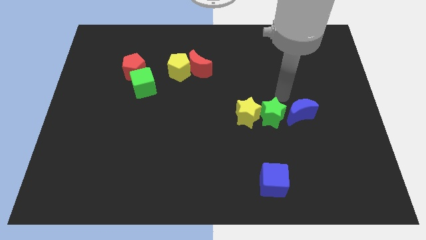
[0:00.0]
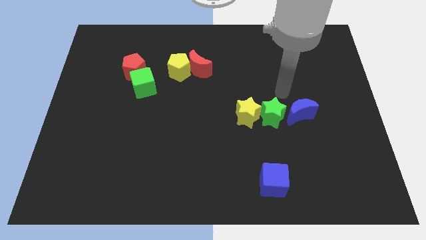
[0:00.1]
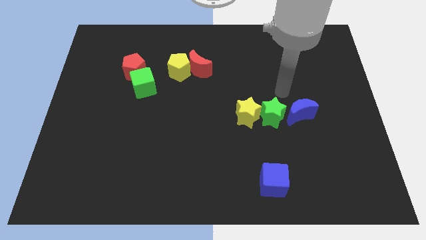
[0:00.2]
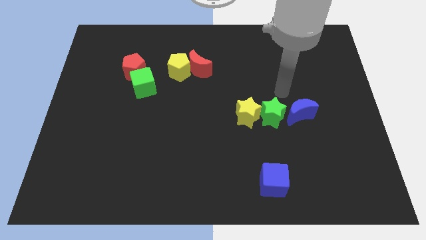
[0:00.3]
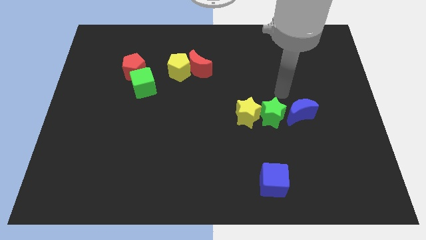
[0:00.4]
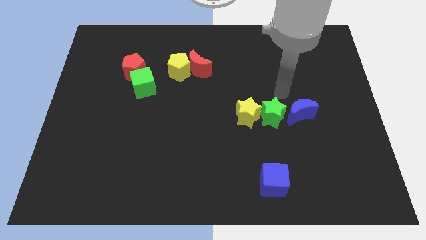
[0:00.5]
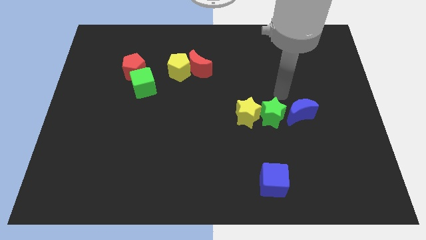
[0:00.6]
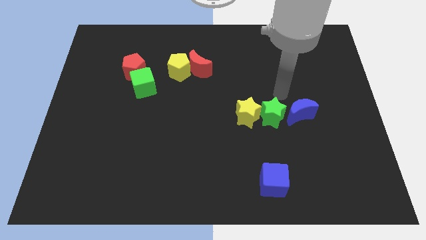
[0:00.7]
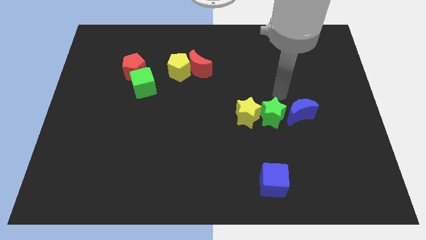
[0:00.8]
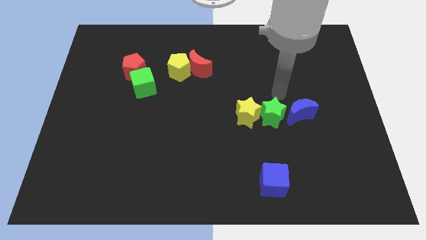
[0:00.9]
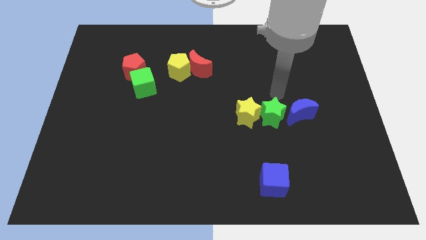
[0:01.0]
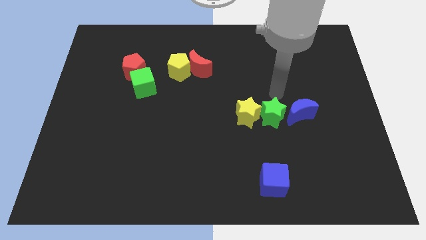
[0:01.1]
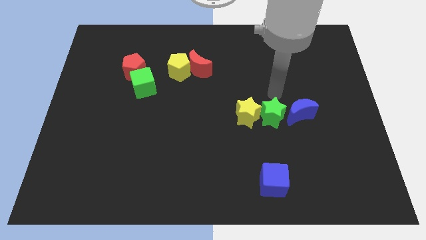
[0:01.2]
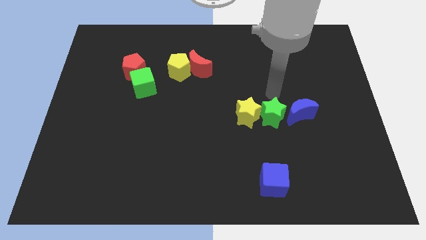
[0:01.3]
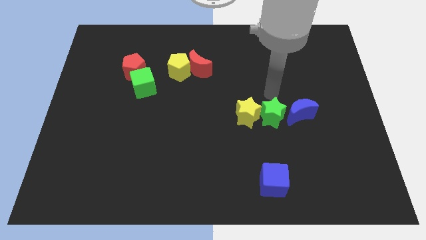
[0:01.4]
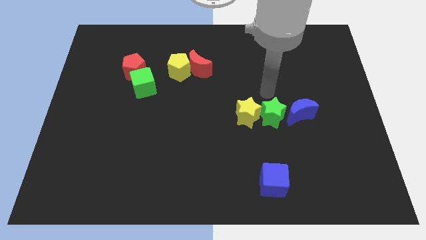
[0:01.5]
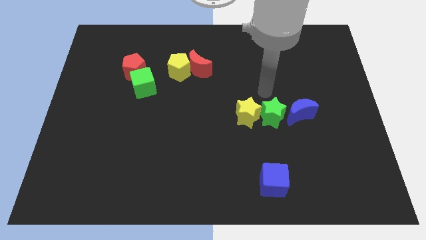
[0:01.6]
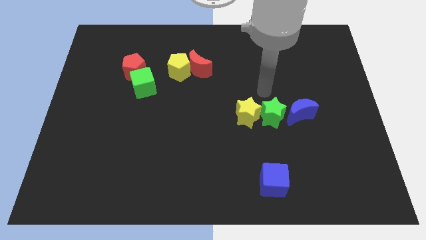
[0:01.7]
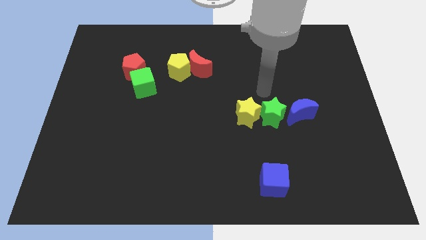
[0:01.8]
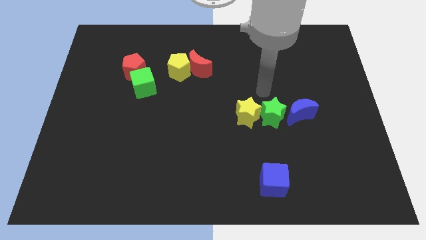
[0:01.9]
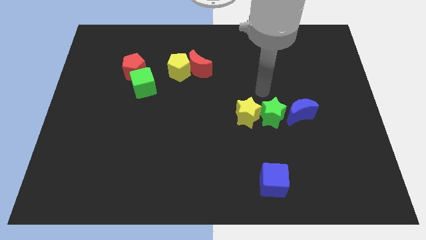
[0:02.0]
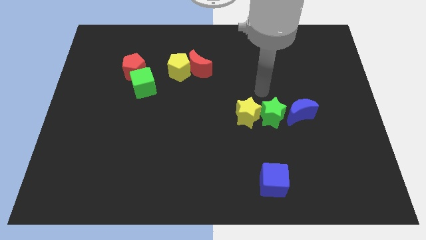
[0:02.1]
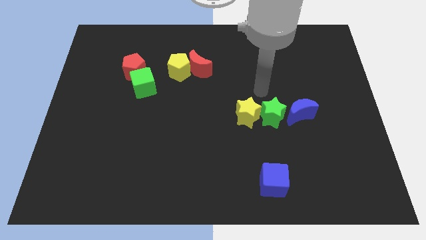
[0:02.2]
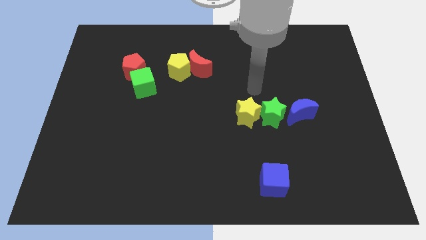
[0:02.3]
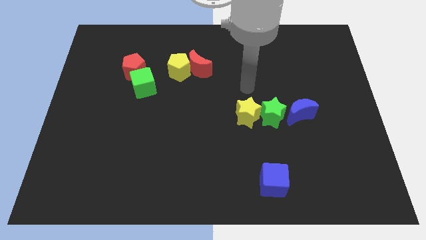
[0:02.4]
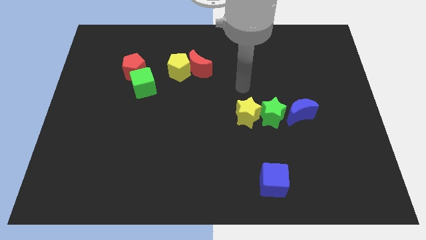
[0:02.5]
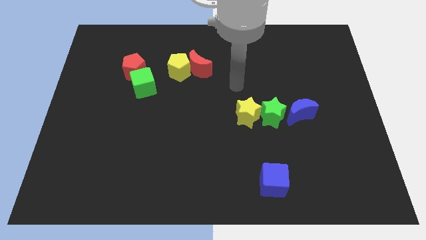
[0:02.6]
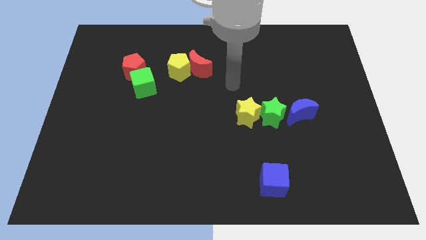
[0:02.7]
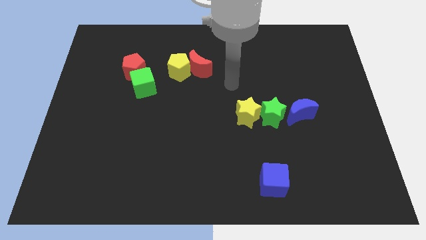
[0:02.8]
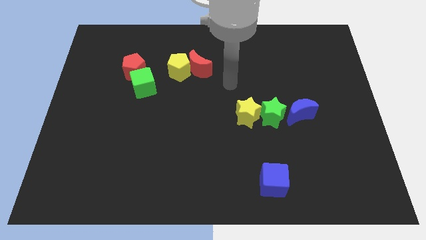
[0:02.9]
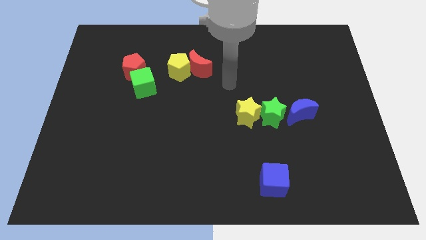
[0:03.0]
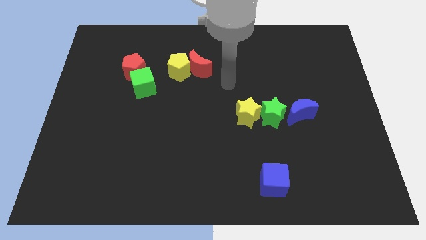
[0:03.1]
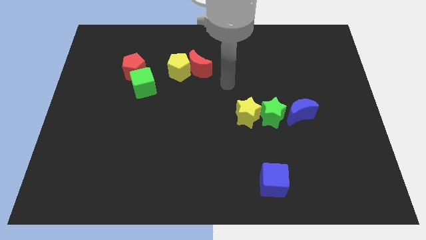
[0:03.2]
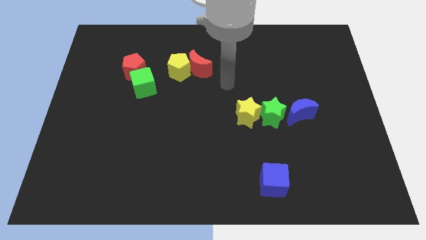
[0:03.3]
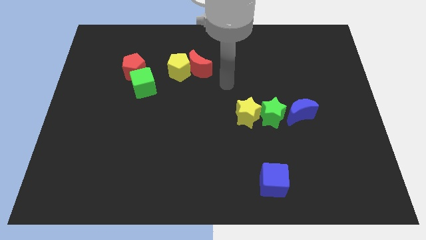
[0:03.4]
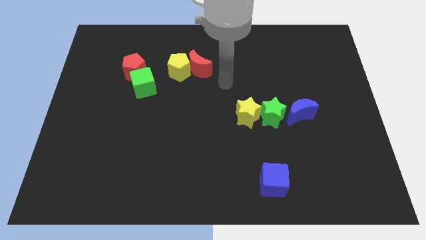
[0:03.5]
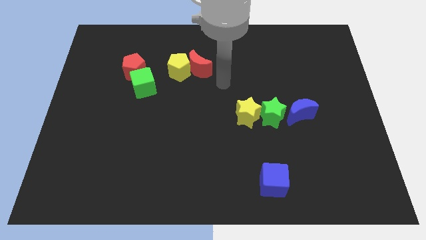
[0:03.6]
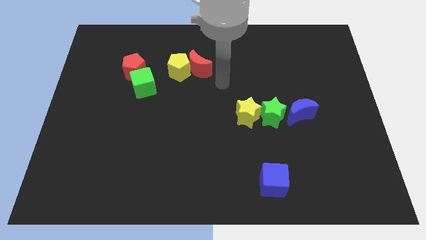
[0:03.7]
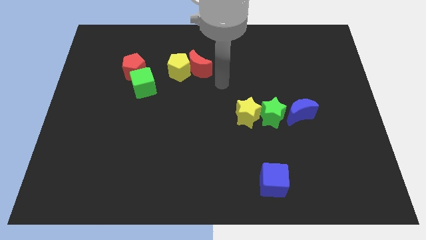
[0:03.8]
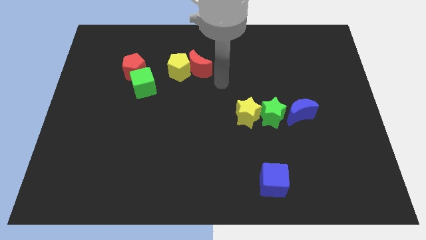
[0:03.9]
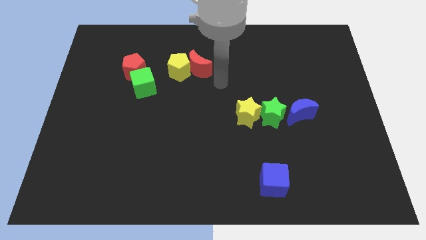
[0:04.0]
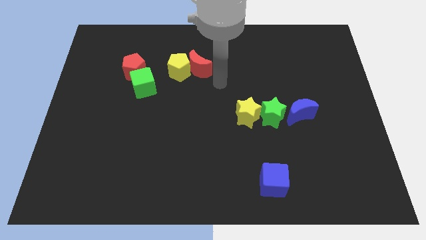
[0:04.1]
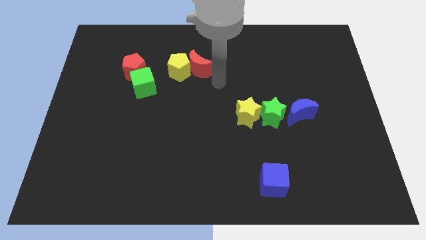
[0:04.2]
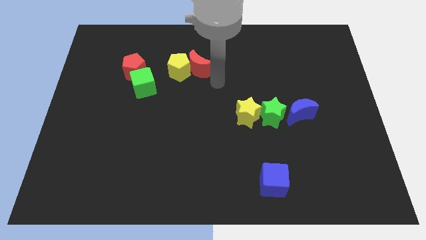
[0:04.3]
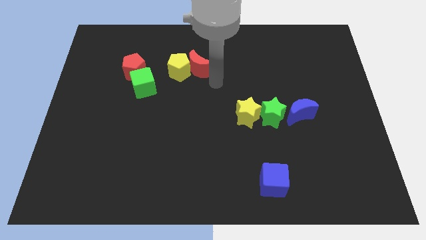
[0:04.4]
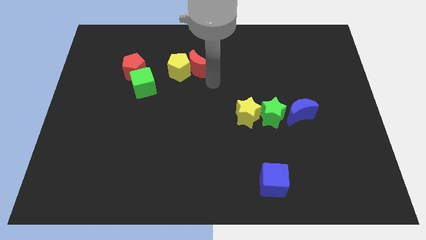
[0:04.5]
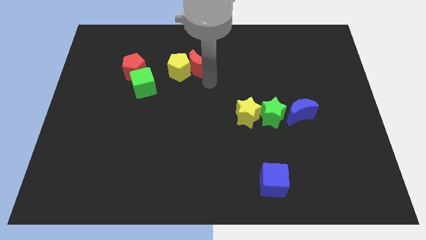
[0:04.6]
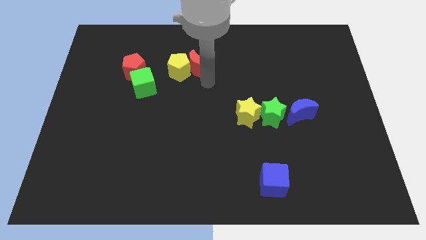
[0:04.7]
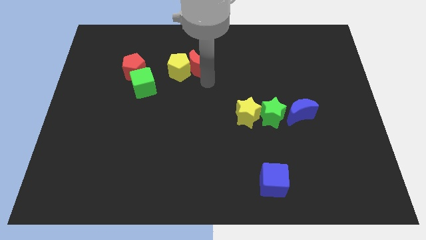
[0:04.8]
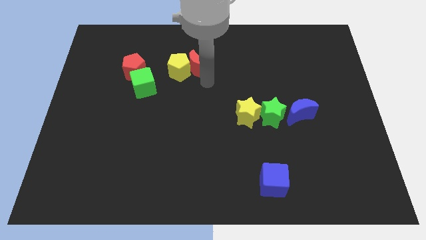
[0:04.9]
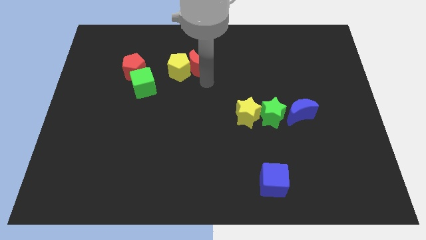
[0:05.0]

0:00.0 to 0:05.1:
move your arm away from the green star

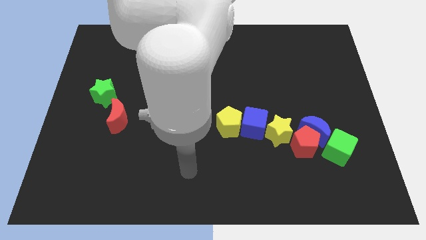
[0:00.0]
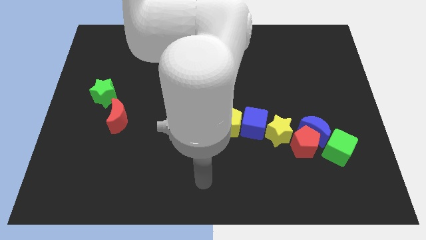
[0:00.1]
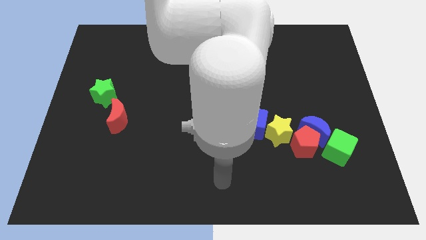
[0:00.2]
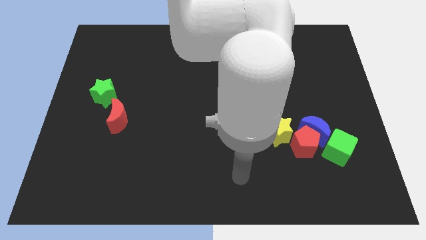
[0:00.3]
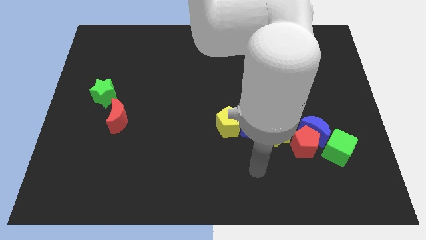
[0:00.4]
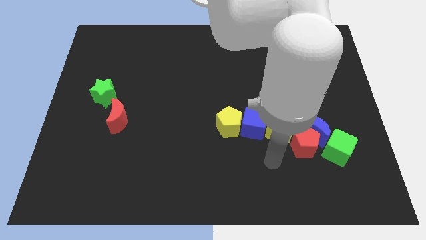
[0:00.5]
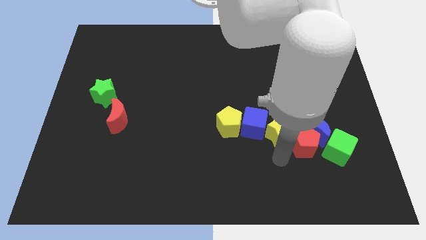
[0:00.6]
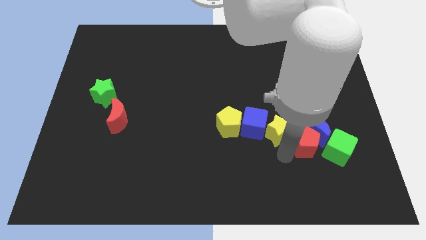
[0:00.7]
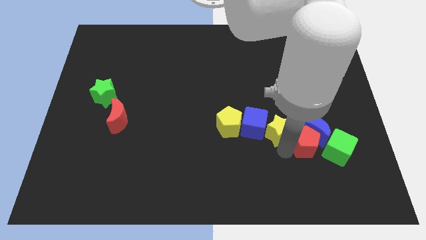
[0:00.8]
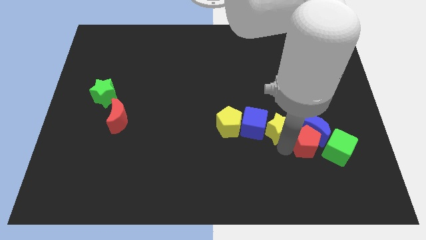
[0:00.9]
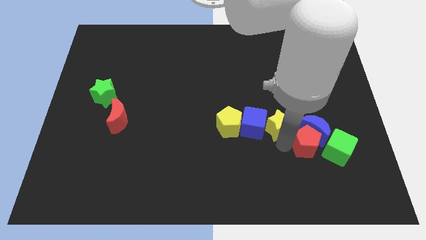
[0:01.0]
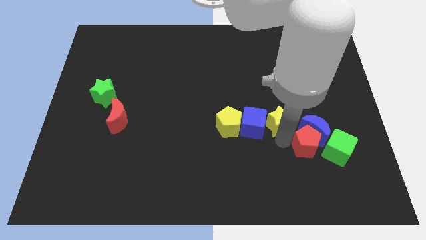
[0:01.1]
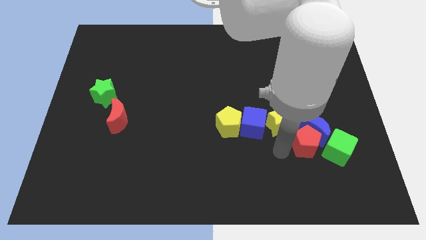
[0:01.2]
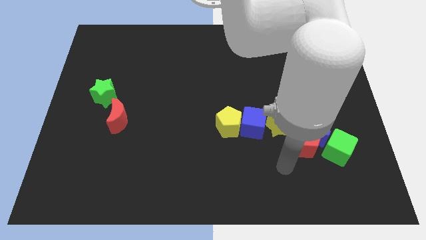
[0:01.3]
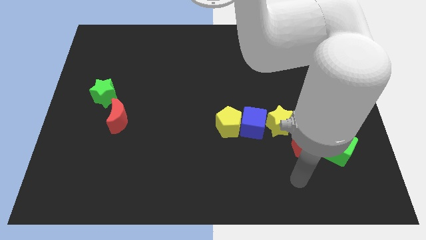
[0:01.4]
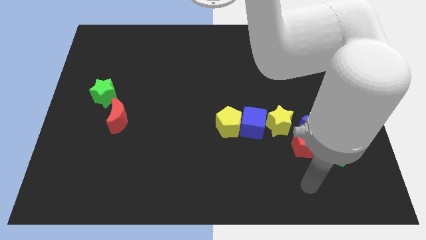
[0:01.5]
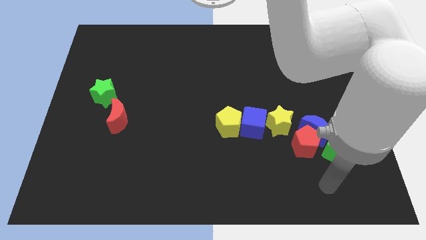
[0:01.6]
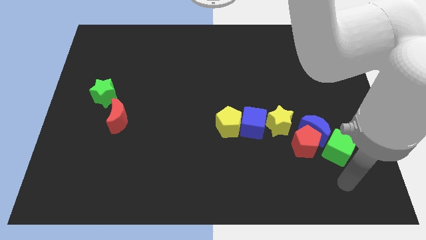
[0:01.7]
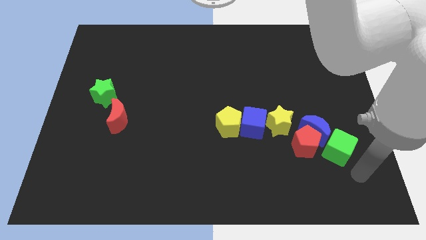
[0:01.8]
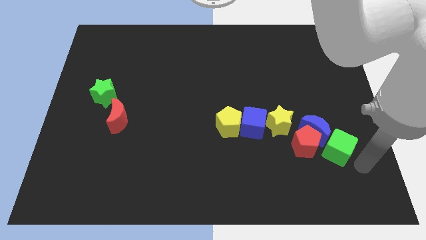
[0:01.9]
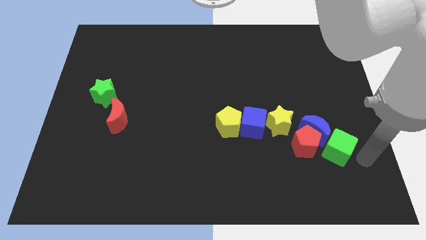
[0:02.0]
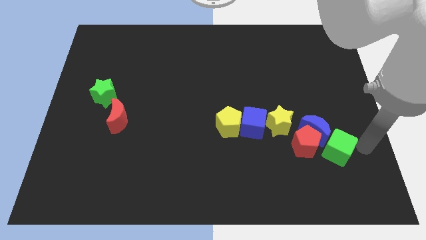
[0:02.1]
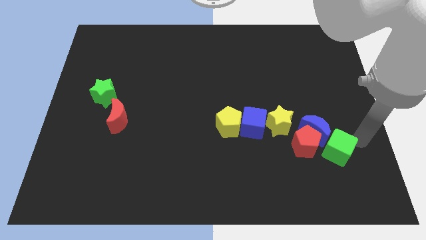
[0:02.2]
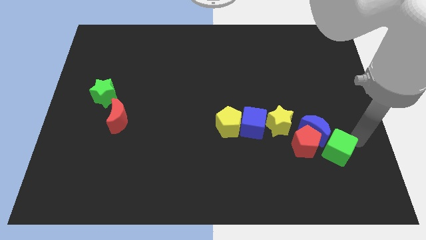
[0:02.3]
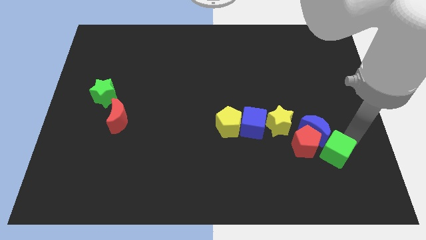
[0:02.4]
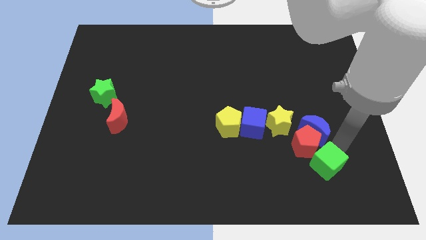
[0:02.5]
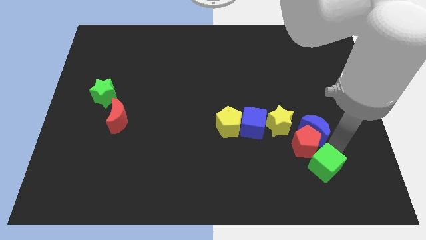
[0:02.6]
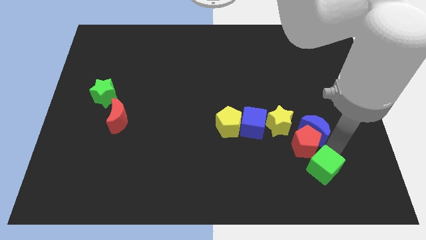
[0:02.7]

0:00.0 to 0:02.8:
push green cube slightly towards down

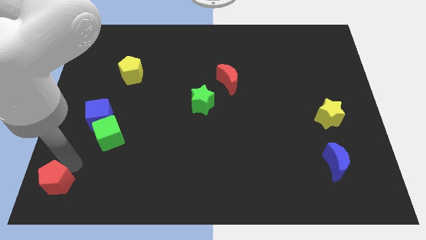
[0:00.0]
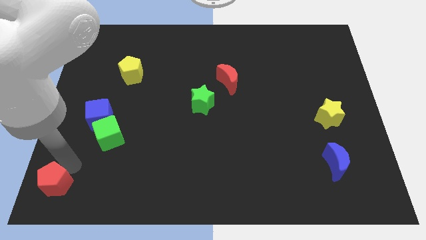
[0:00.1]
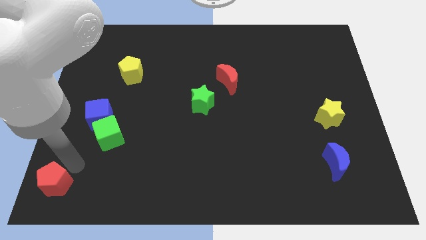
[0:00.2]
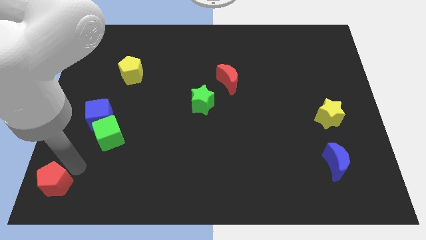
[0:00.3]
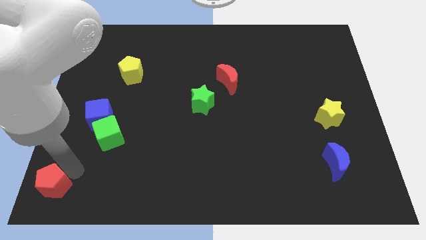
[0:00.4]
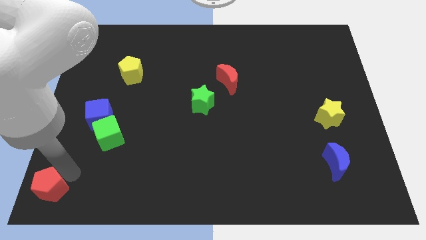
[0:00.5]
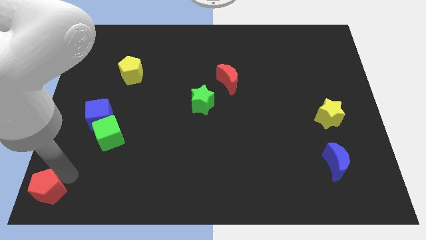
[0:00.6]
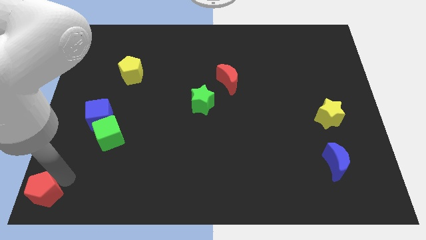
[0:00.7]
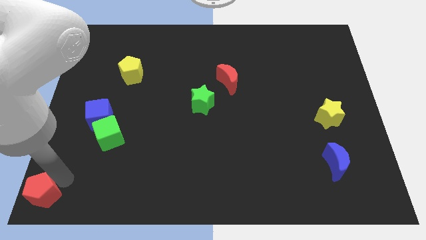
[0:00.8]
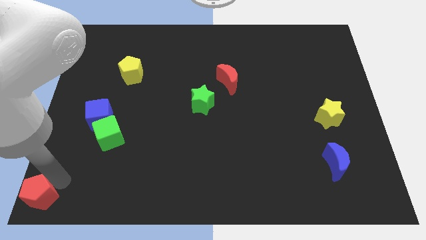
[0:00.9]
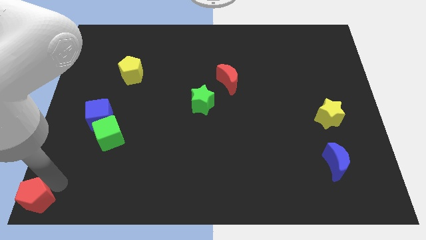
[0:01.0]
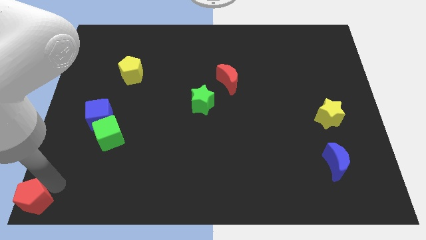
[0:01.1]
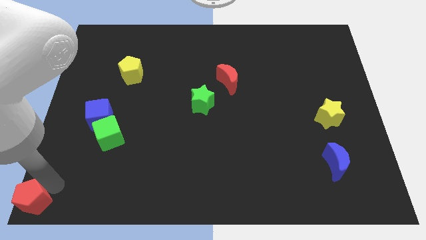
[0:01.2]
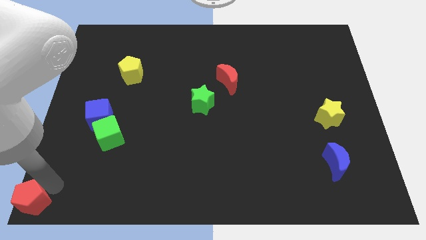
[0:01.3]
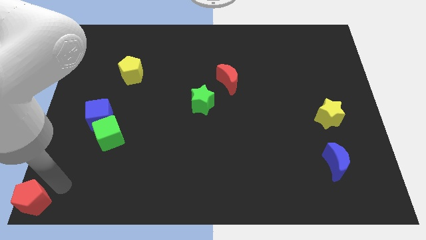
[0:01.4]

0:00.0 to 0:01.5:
push the red pentagon to the bottom left corner of the board
